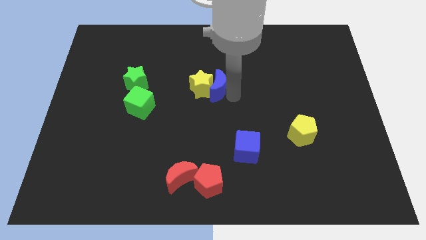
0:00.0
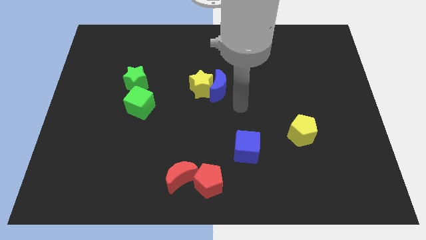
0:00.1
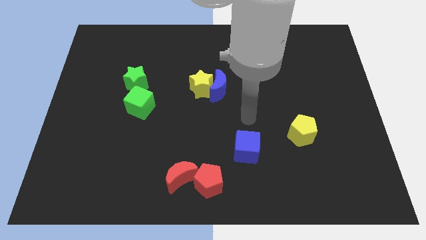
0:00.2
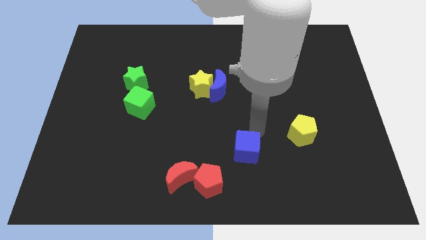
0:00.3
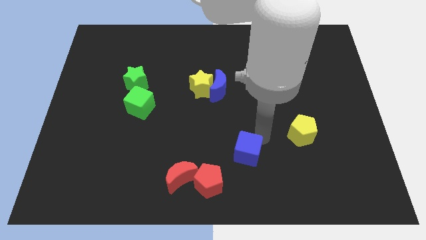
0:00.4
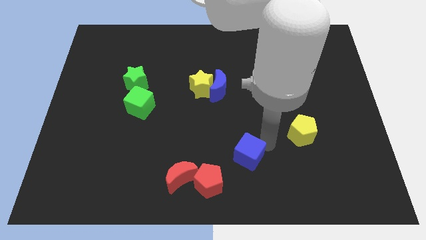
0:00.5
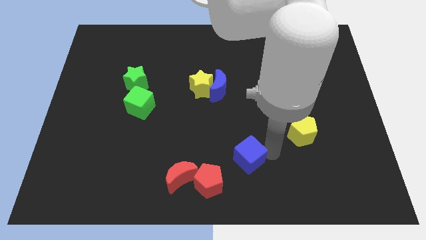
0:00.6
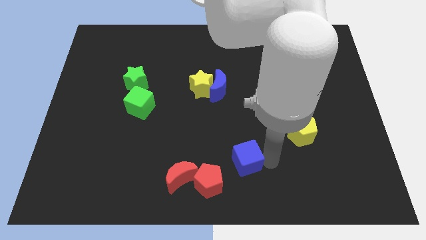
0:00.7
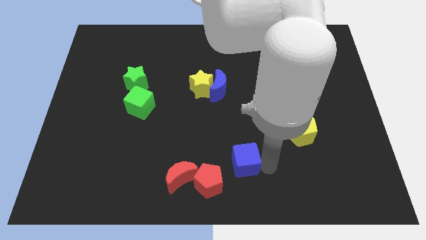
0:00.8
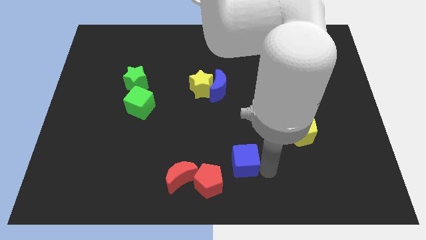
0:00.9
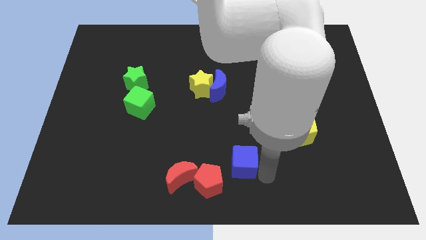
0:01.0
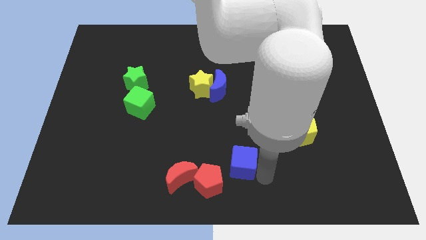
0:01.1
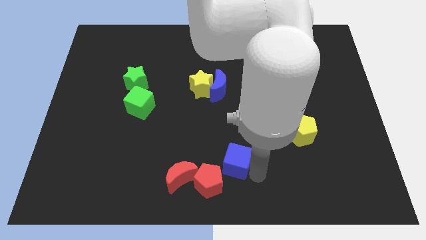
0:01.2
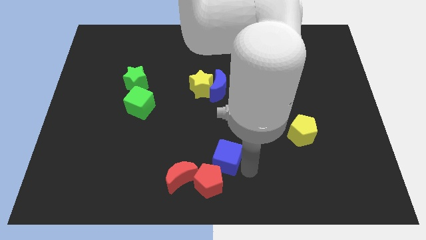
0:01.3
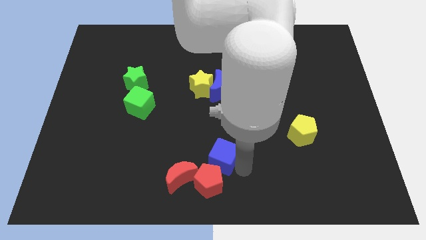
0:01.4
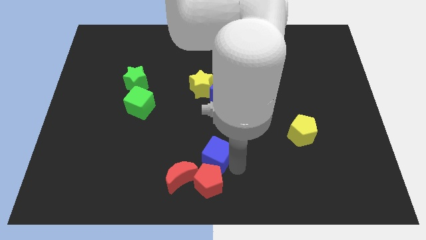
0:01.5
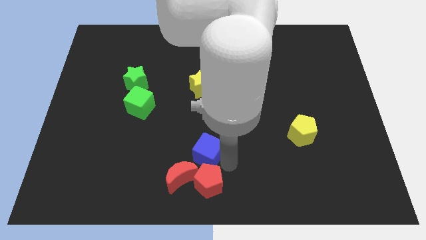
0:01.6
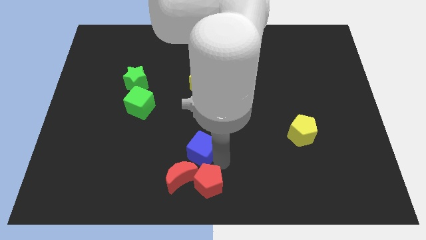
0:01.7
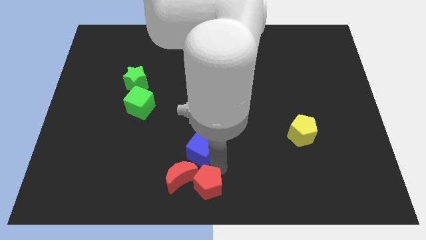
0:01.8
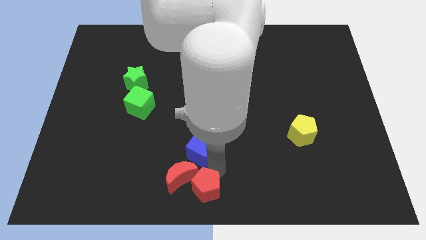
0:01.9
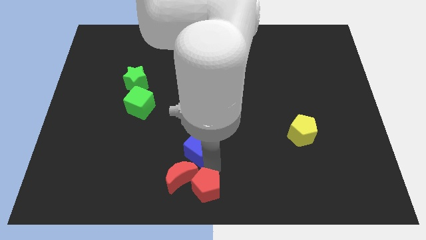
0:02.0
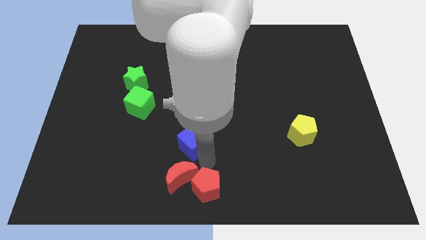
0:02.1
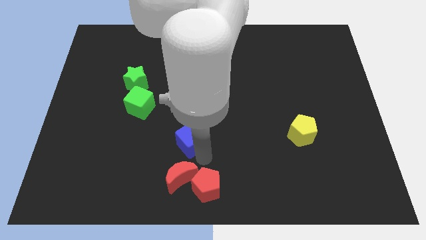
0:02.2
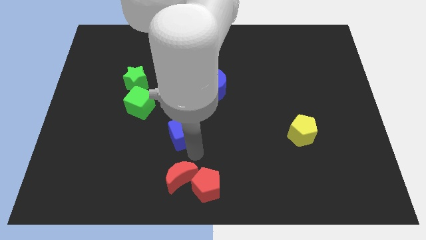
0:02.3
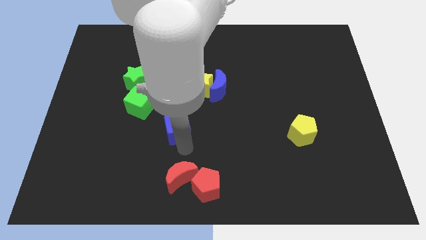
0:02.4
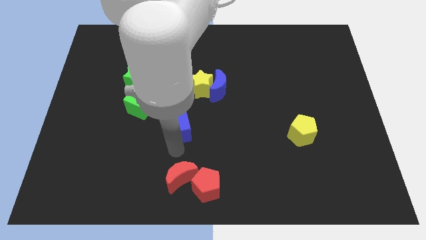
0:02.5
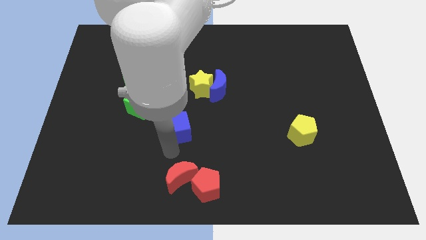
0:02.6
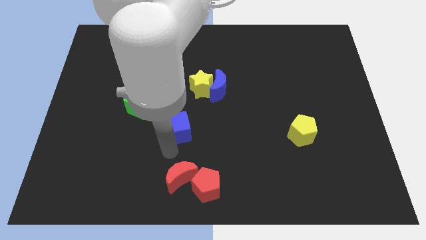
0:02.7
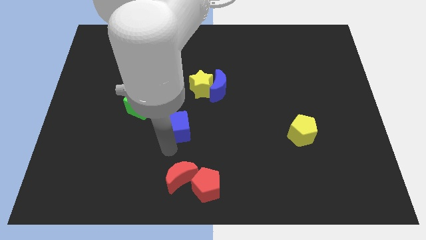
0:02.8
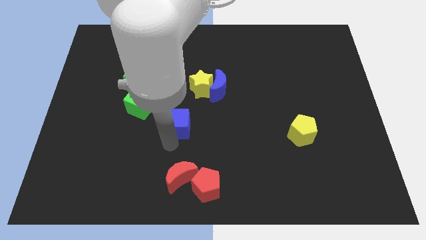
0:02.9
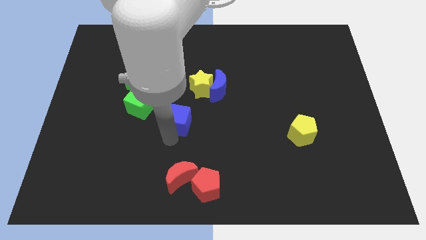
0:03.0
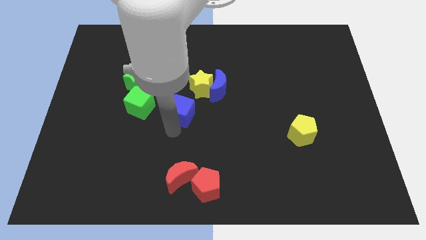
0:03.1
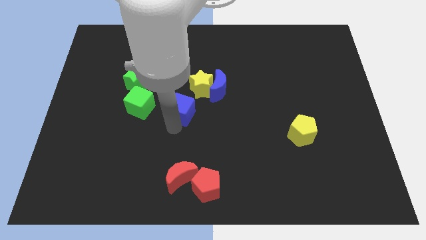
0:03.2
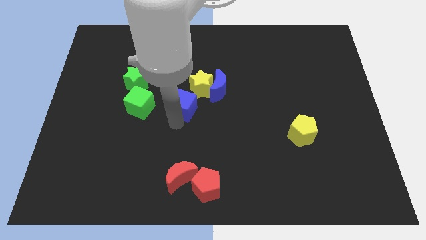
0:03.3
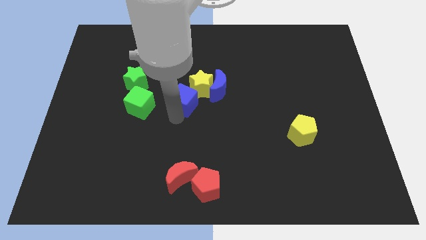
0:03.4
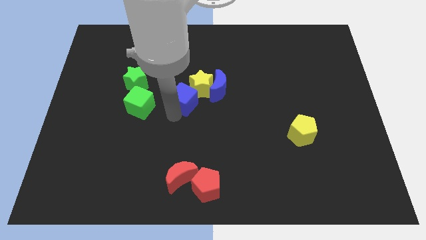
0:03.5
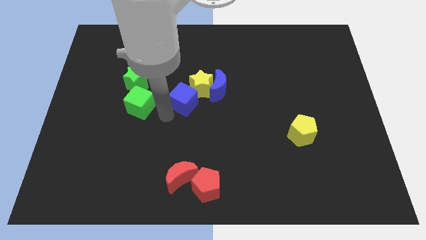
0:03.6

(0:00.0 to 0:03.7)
place the blue cube below the yellow star

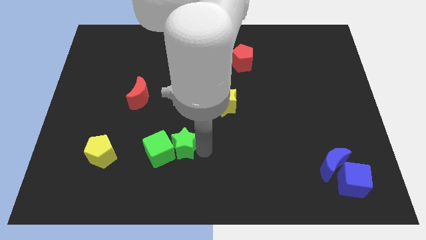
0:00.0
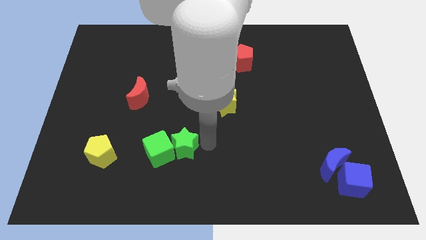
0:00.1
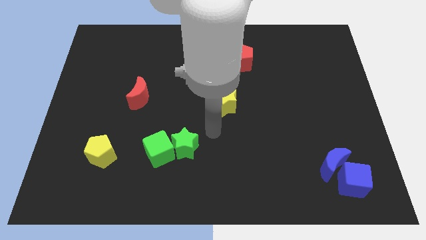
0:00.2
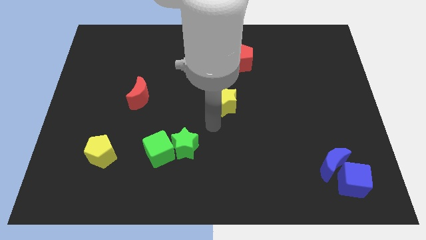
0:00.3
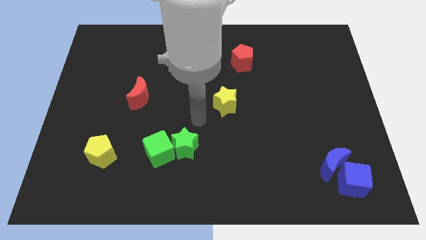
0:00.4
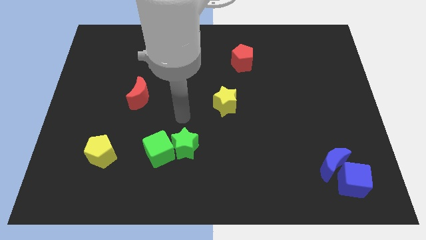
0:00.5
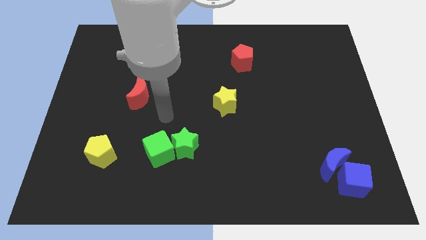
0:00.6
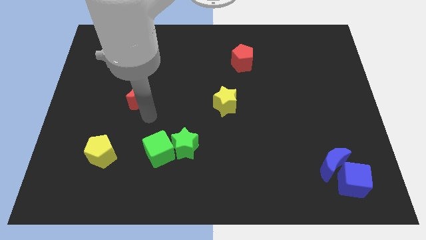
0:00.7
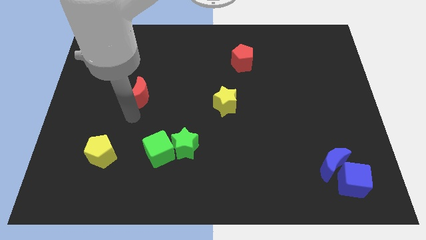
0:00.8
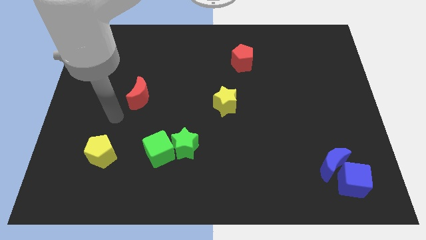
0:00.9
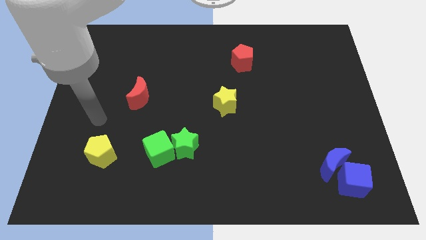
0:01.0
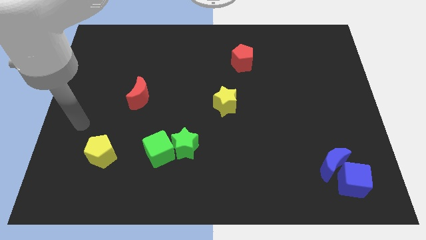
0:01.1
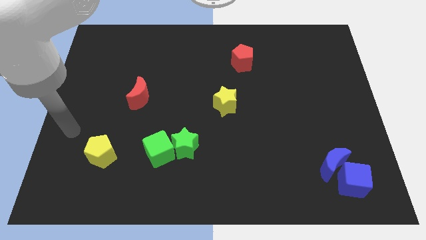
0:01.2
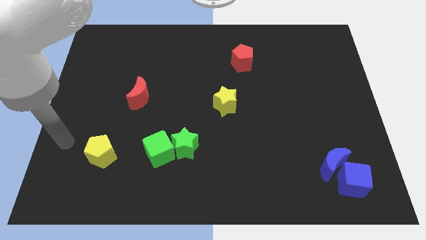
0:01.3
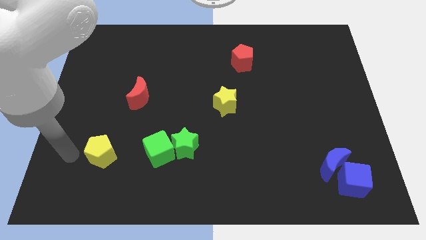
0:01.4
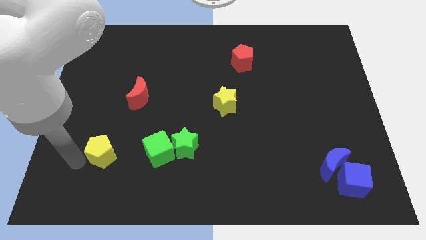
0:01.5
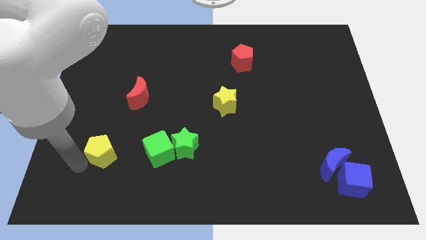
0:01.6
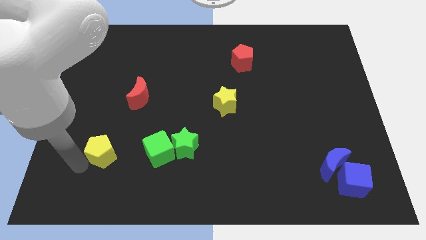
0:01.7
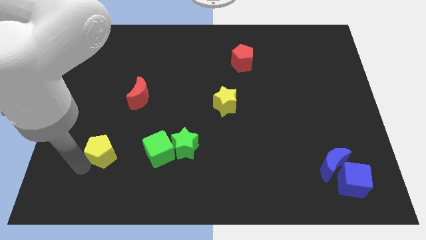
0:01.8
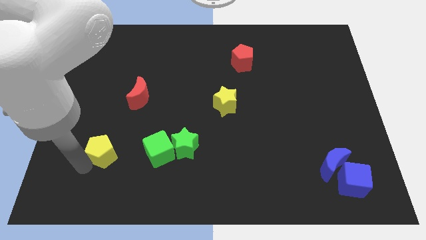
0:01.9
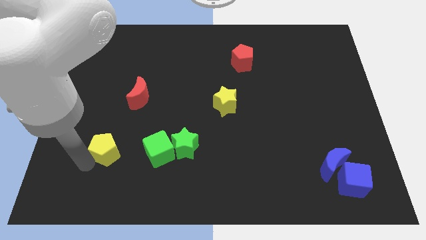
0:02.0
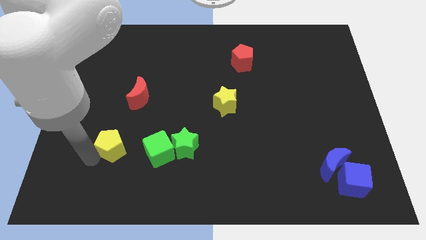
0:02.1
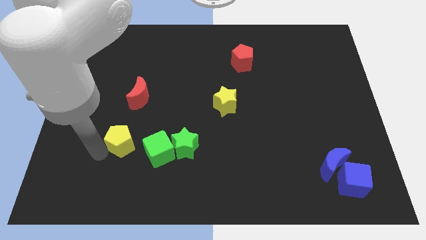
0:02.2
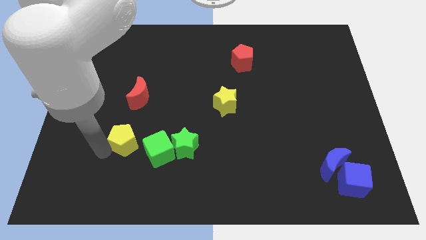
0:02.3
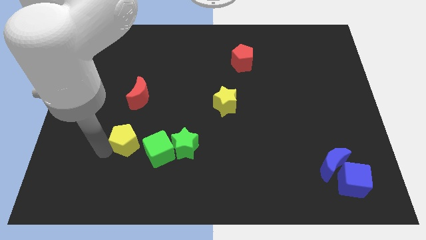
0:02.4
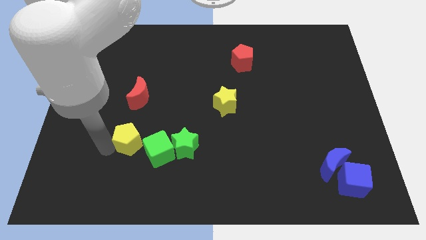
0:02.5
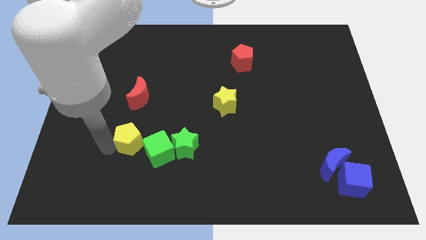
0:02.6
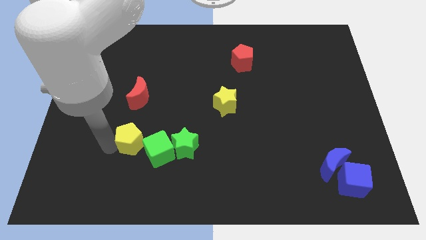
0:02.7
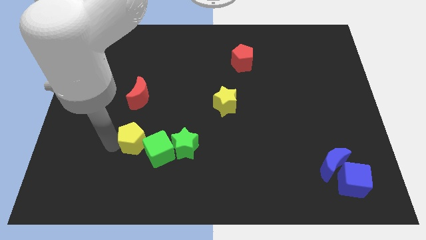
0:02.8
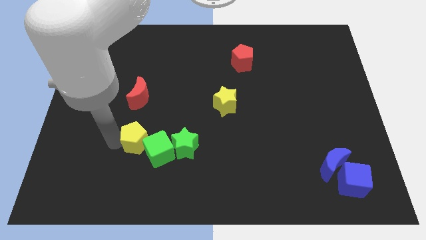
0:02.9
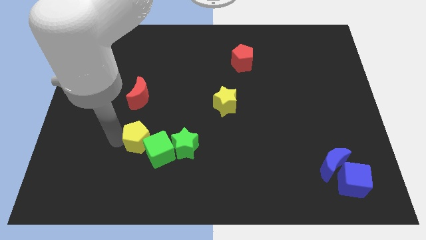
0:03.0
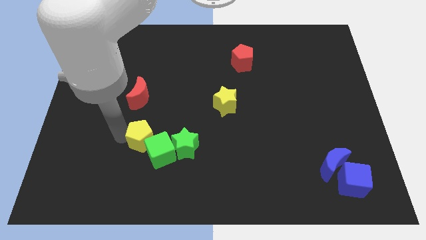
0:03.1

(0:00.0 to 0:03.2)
place yellow pentagon into the green cube

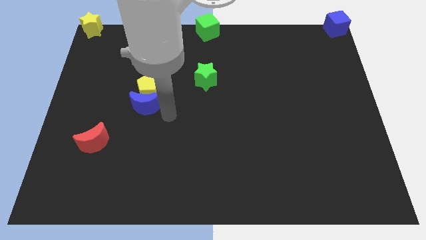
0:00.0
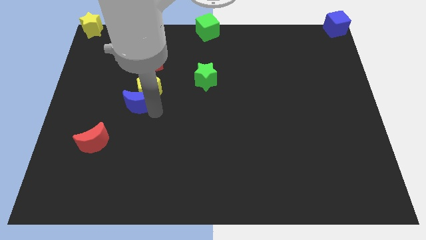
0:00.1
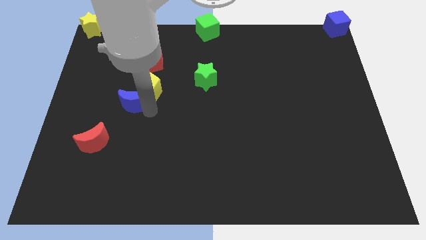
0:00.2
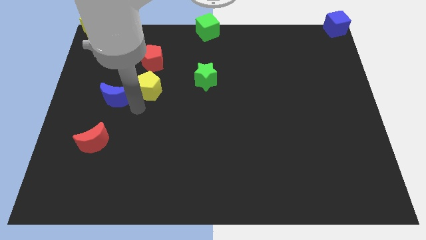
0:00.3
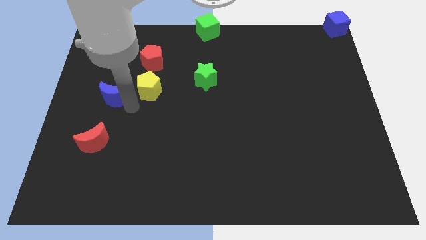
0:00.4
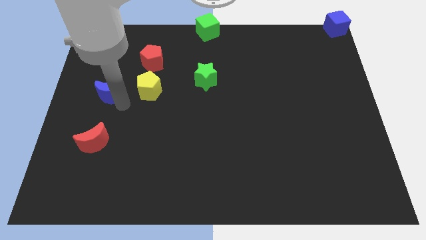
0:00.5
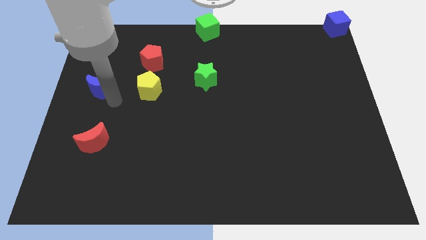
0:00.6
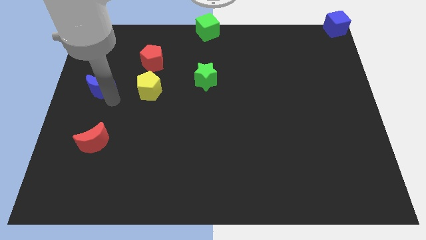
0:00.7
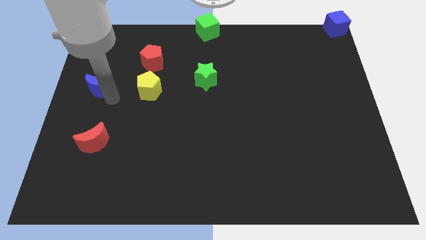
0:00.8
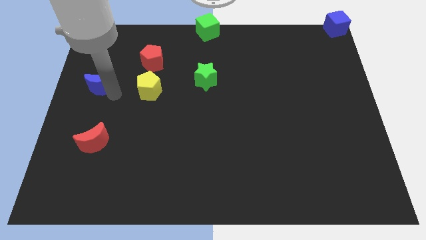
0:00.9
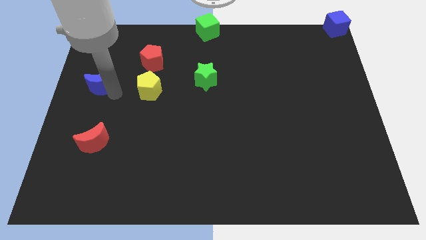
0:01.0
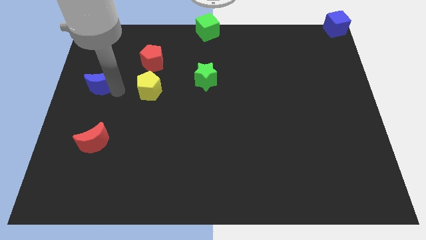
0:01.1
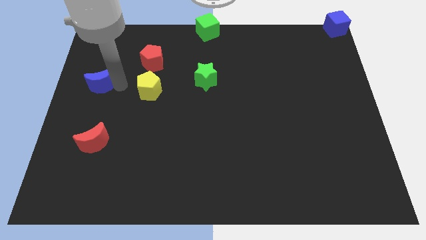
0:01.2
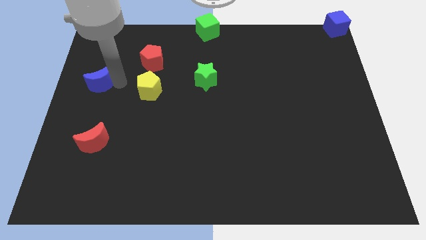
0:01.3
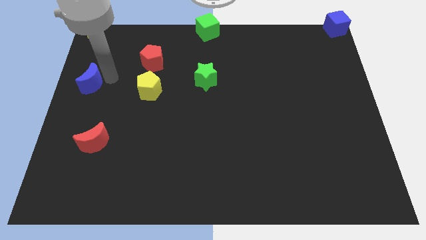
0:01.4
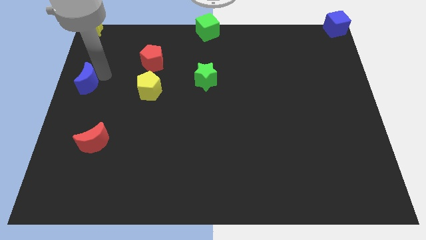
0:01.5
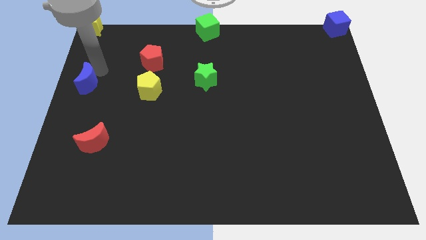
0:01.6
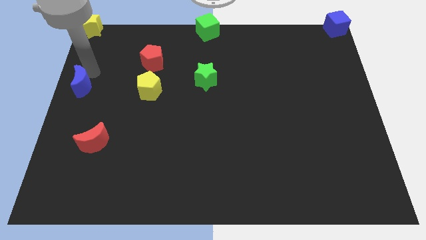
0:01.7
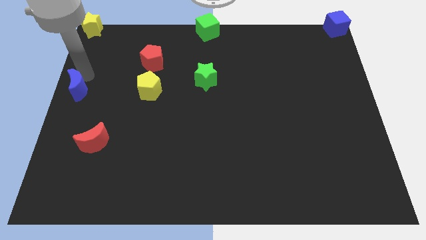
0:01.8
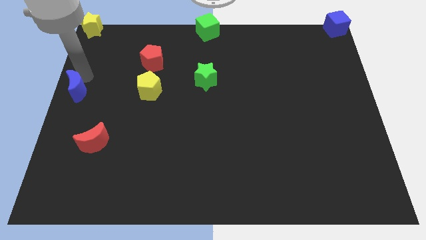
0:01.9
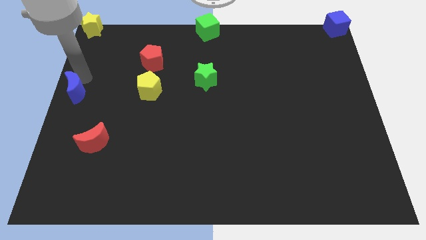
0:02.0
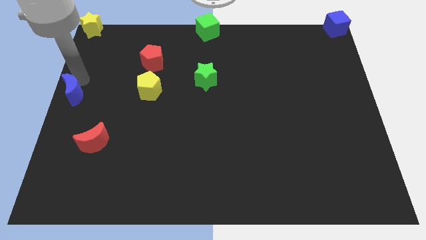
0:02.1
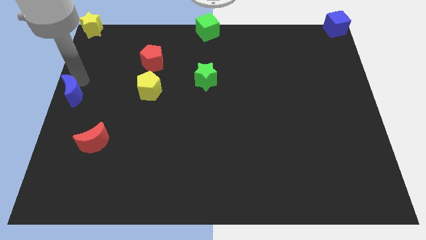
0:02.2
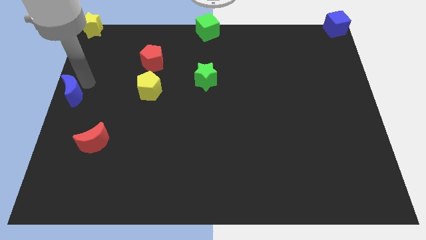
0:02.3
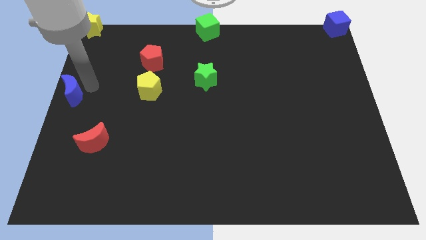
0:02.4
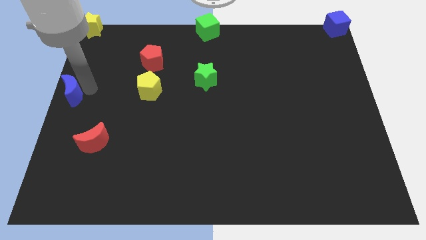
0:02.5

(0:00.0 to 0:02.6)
move blue crescent towards the left center of the board
